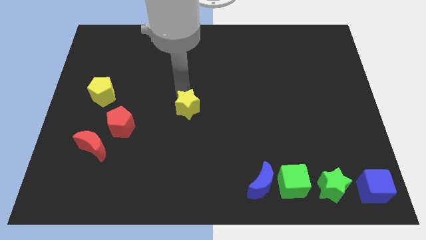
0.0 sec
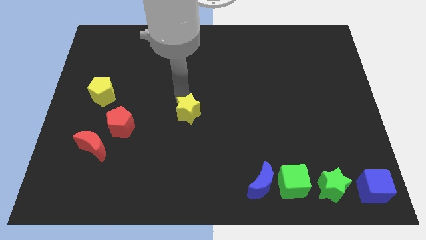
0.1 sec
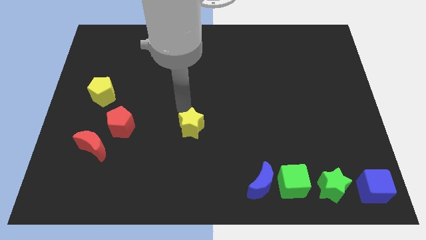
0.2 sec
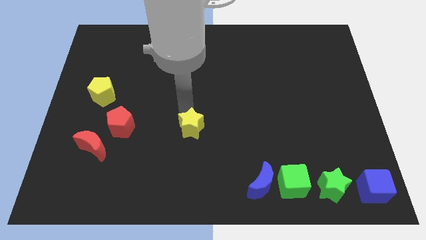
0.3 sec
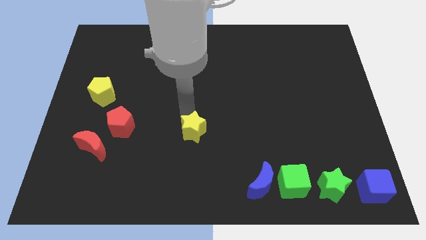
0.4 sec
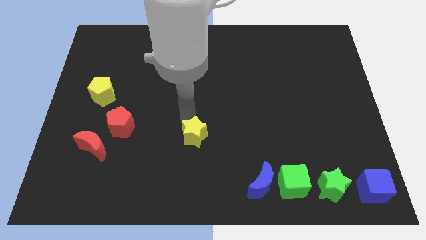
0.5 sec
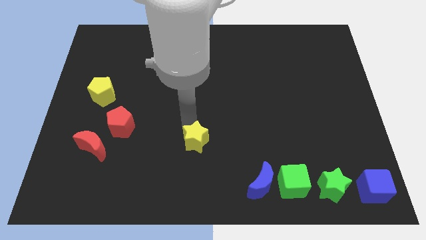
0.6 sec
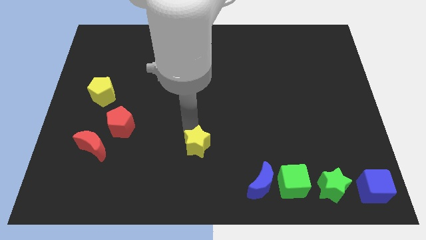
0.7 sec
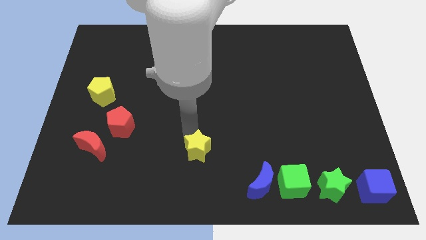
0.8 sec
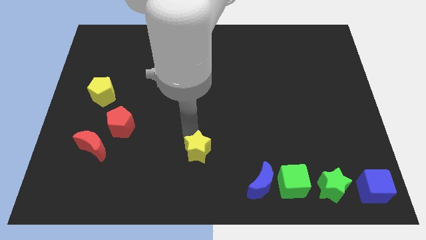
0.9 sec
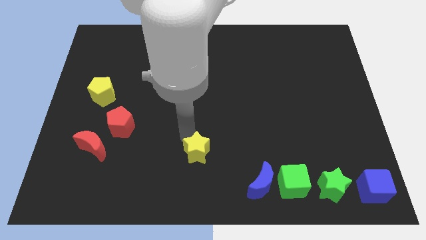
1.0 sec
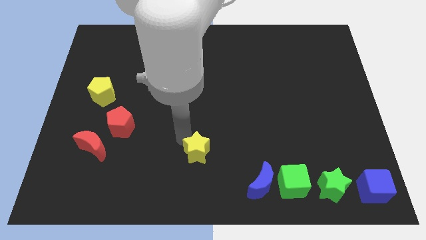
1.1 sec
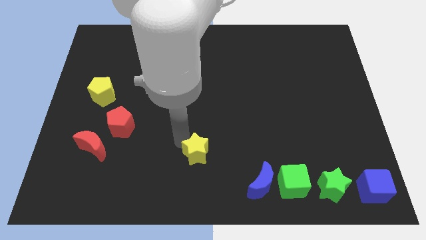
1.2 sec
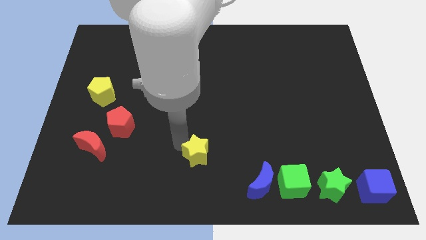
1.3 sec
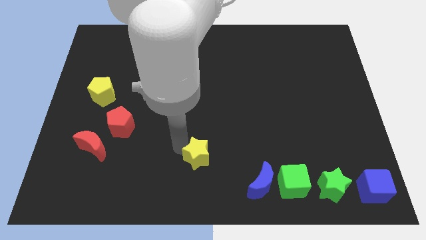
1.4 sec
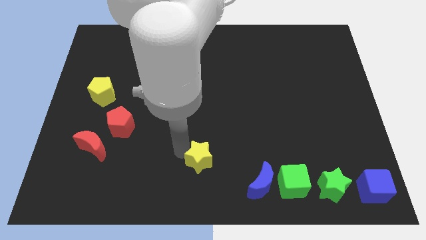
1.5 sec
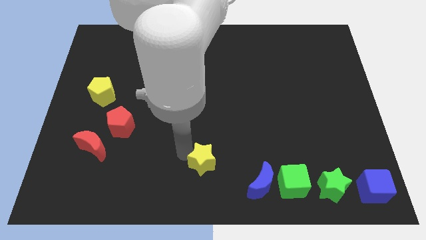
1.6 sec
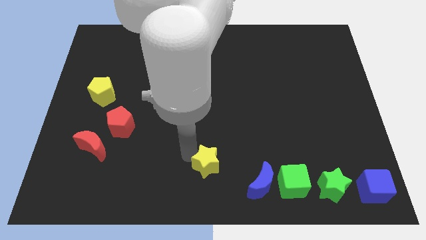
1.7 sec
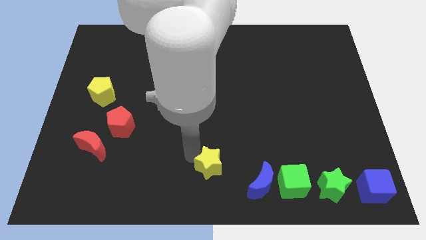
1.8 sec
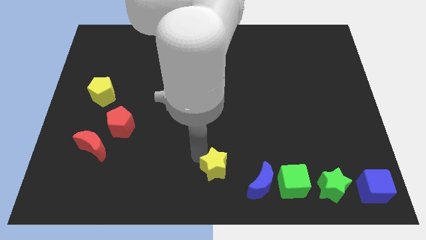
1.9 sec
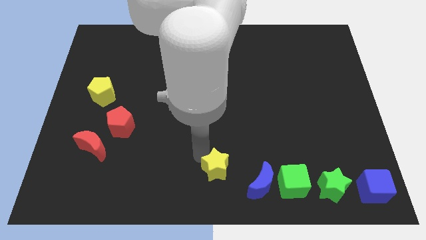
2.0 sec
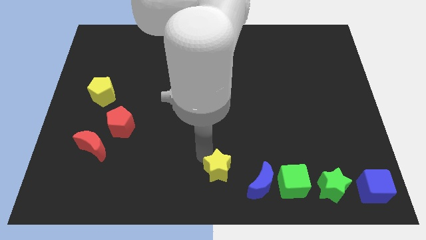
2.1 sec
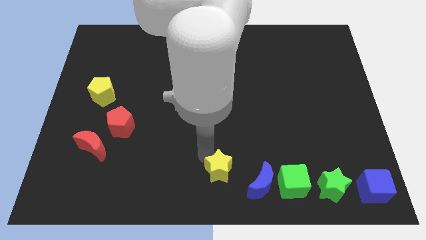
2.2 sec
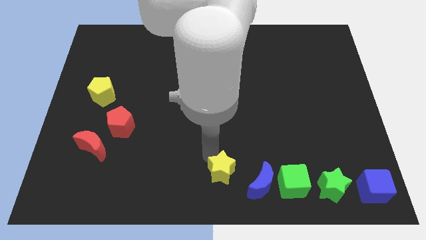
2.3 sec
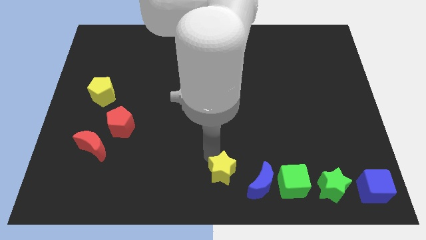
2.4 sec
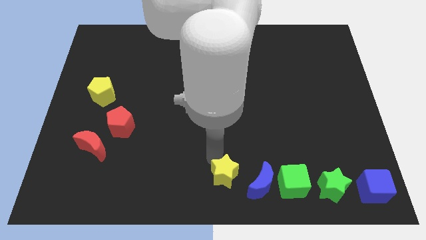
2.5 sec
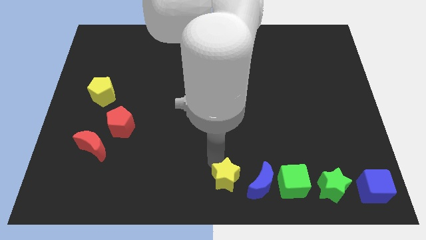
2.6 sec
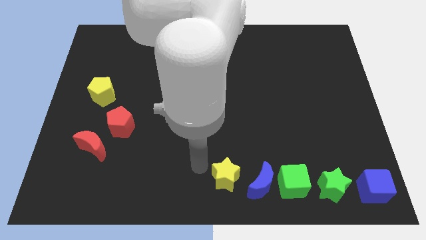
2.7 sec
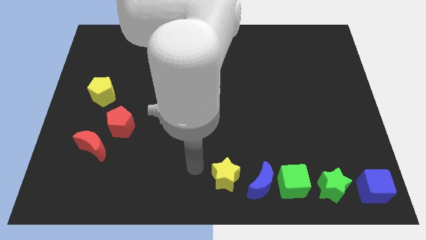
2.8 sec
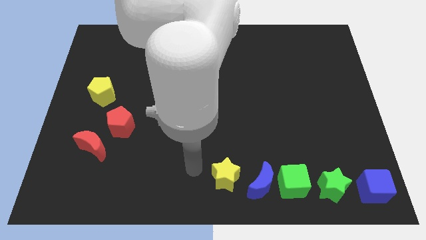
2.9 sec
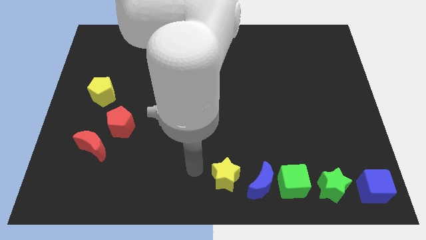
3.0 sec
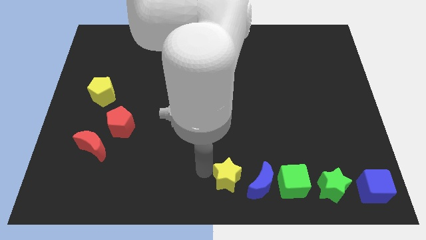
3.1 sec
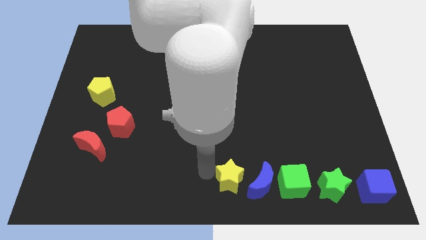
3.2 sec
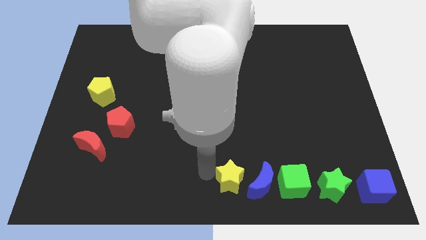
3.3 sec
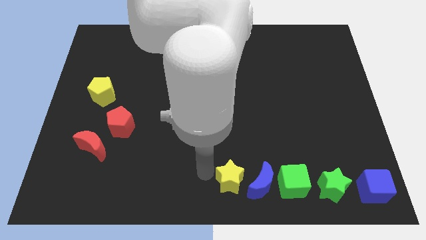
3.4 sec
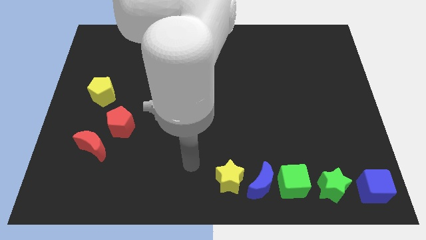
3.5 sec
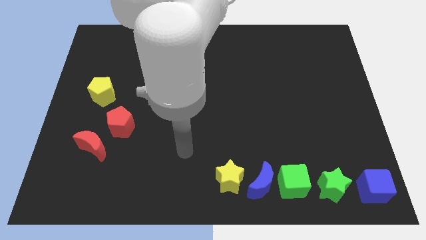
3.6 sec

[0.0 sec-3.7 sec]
push yellow star to the left of blue crescent

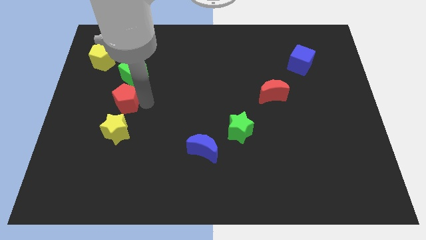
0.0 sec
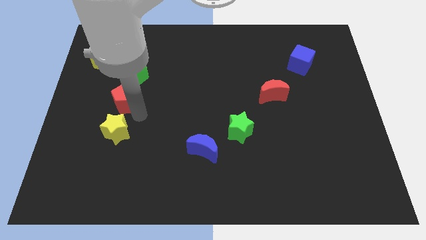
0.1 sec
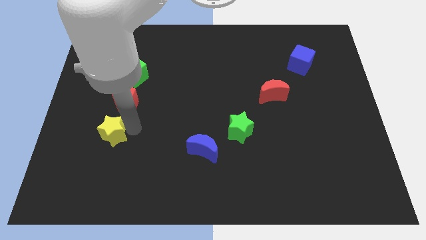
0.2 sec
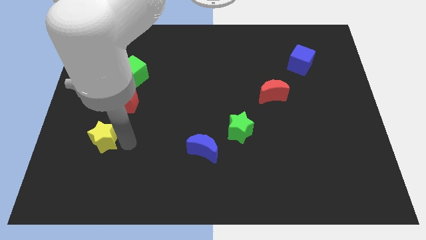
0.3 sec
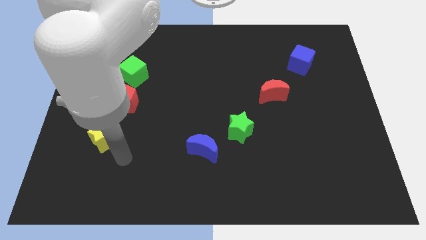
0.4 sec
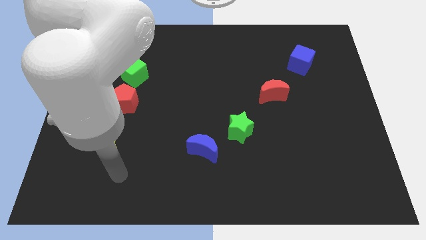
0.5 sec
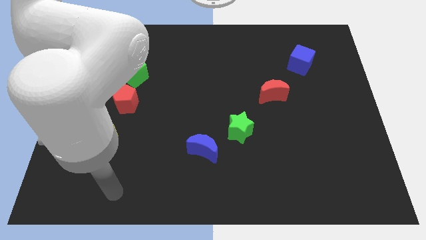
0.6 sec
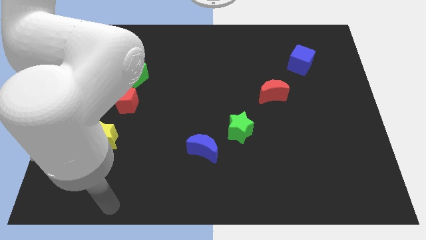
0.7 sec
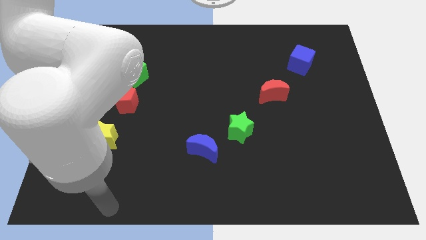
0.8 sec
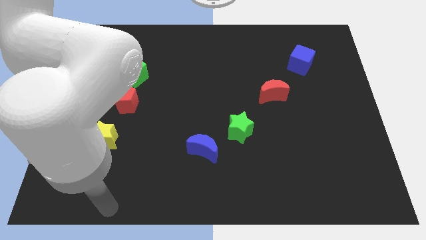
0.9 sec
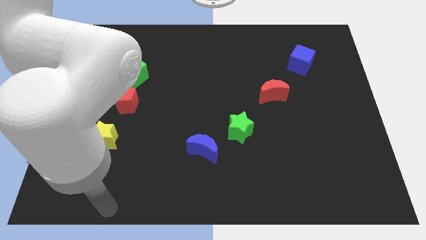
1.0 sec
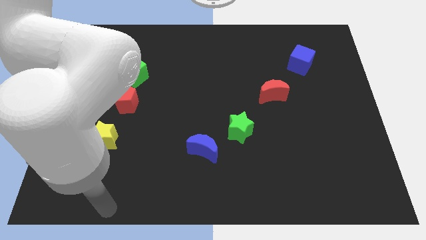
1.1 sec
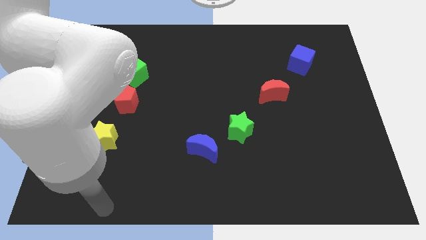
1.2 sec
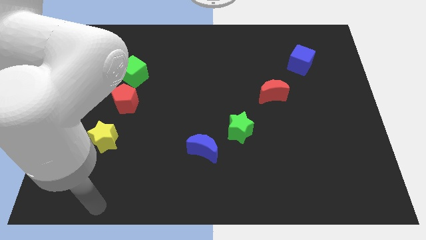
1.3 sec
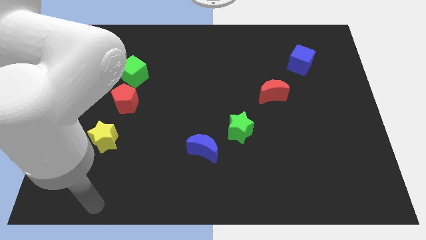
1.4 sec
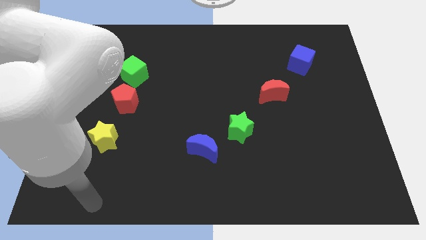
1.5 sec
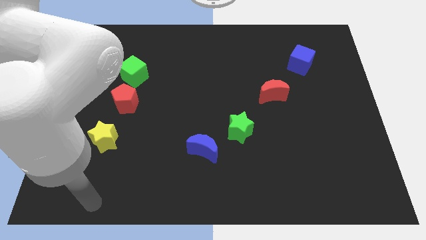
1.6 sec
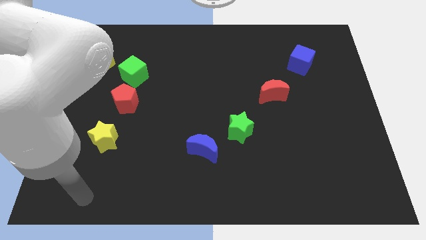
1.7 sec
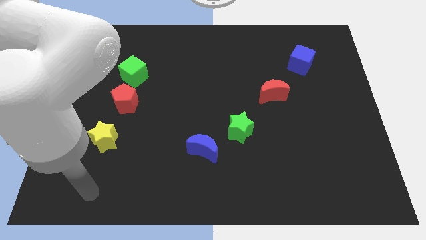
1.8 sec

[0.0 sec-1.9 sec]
tap yellow star slightly

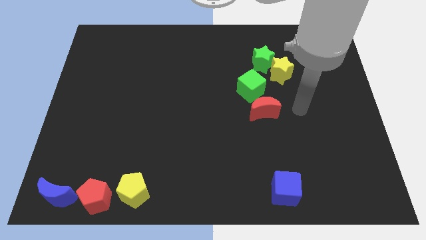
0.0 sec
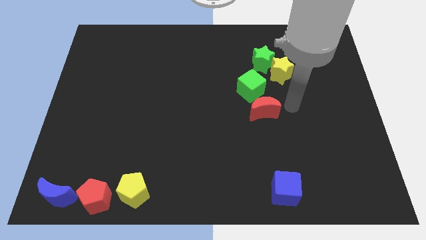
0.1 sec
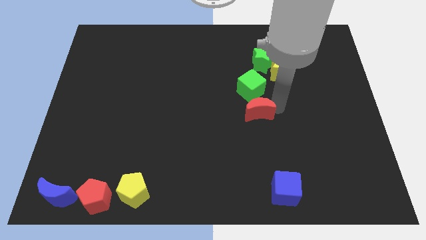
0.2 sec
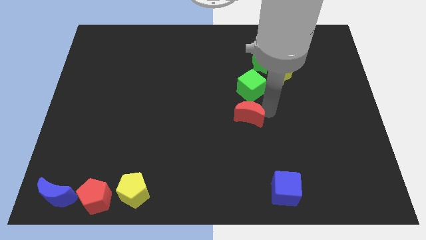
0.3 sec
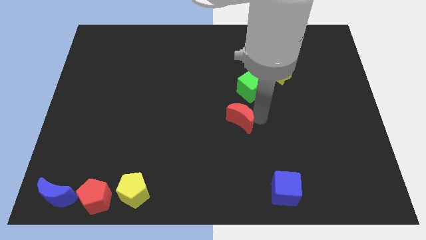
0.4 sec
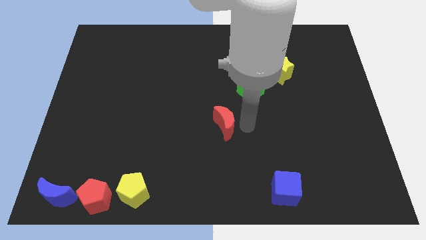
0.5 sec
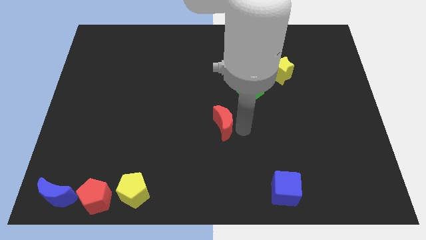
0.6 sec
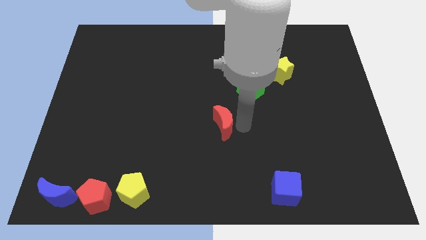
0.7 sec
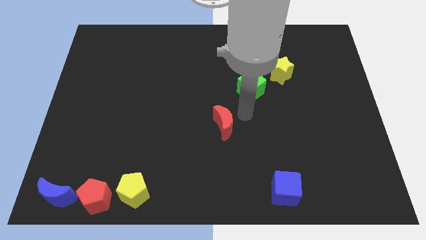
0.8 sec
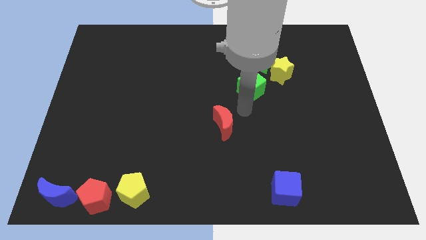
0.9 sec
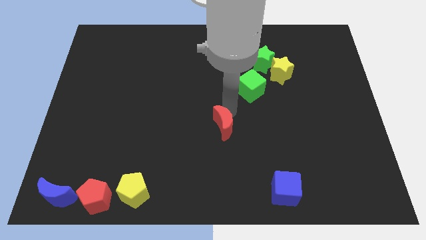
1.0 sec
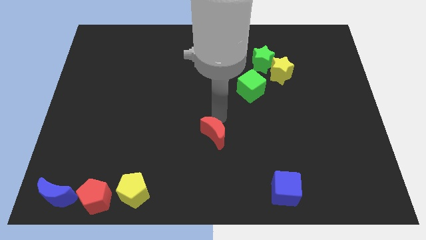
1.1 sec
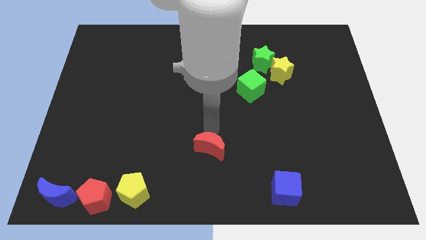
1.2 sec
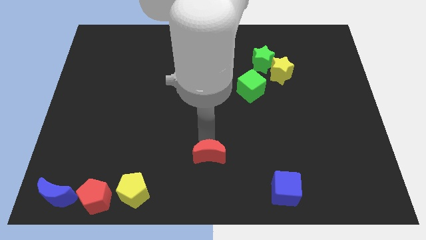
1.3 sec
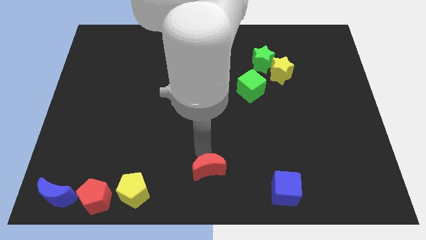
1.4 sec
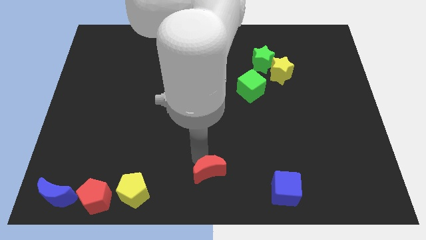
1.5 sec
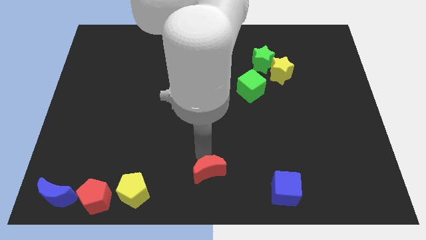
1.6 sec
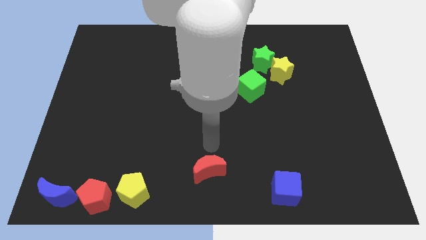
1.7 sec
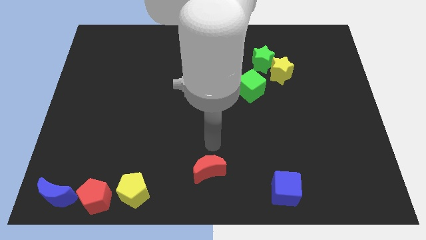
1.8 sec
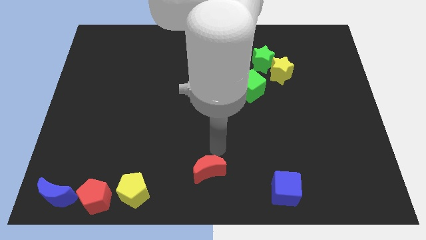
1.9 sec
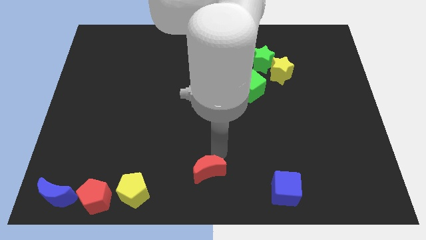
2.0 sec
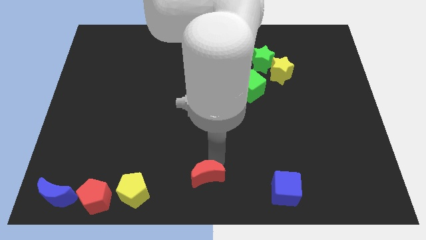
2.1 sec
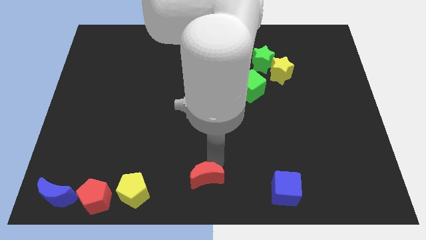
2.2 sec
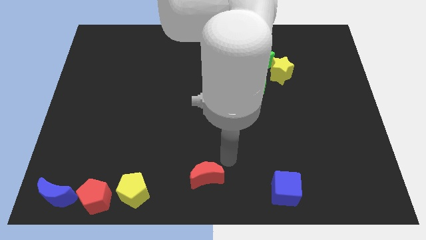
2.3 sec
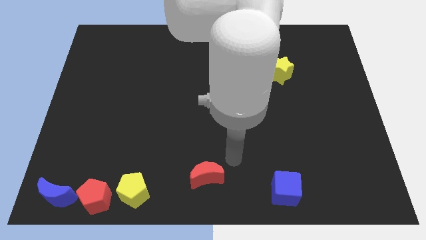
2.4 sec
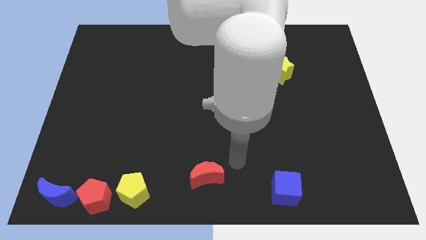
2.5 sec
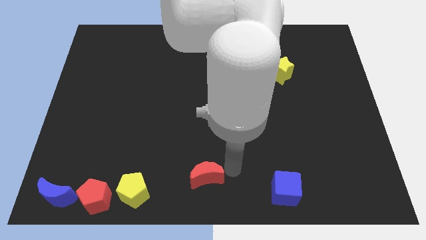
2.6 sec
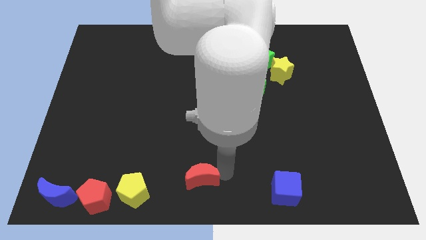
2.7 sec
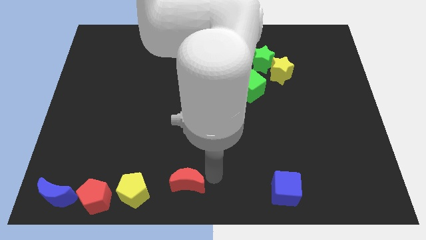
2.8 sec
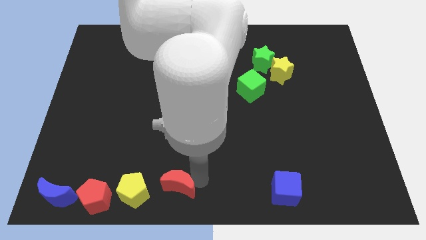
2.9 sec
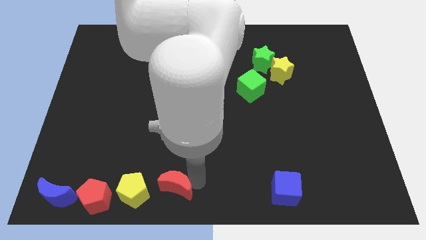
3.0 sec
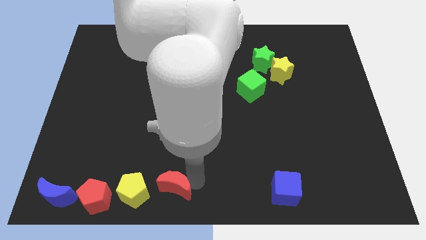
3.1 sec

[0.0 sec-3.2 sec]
separate red moon from green cube
